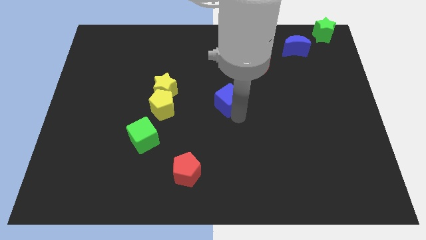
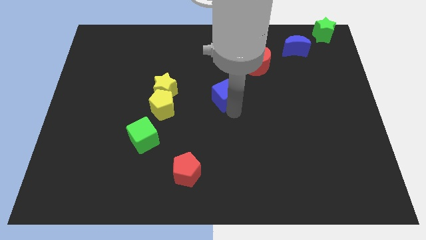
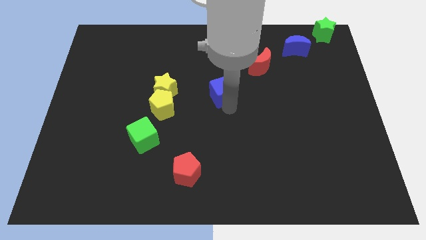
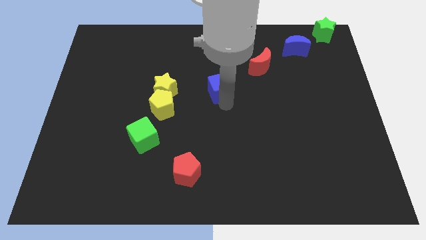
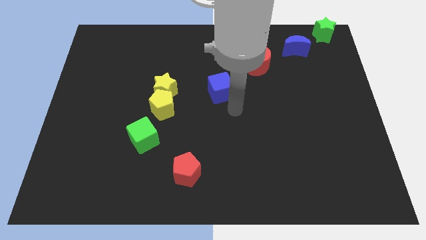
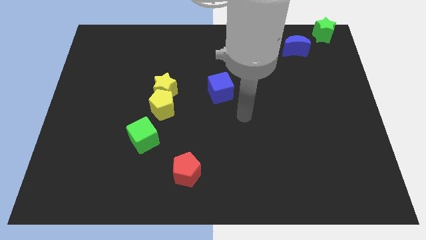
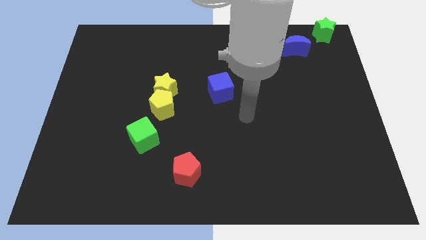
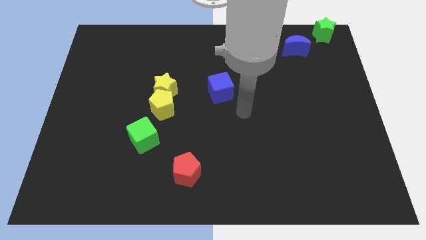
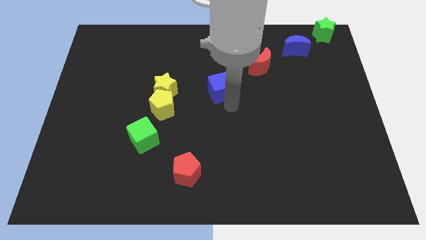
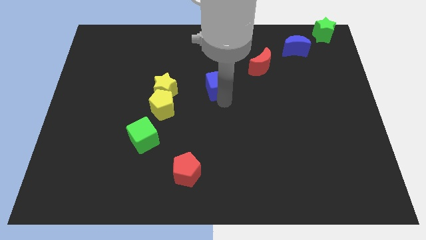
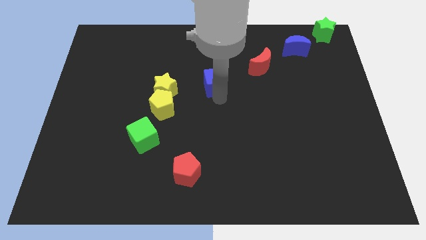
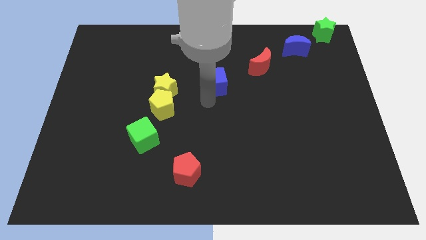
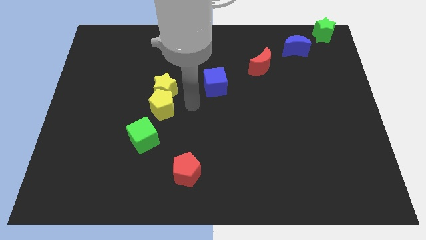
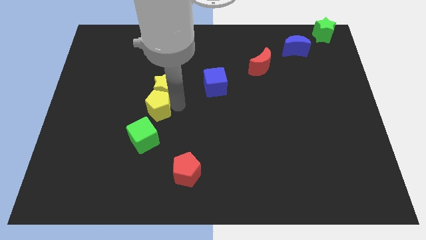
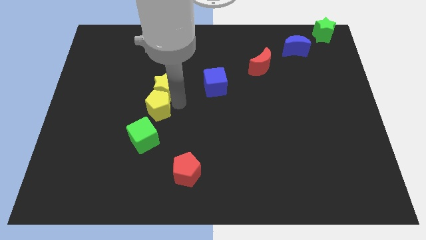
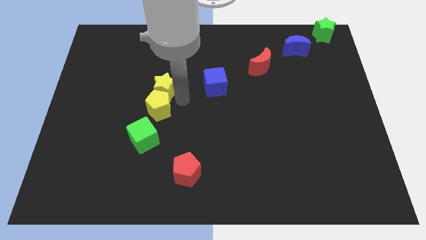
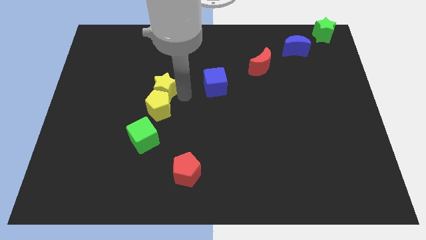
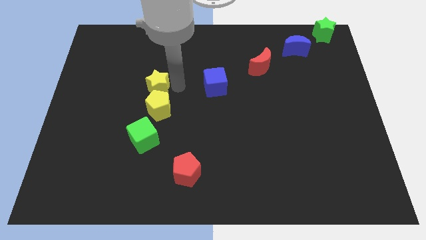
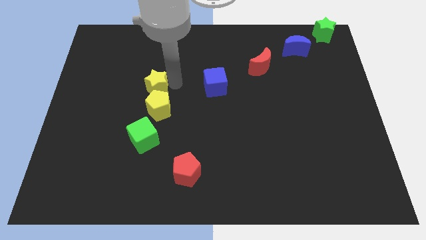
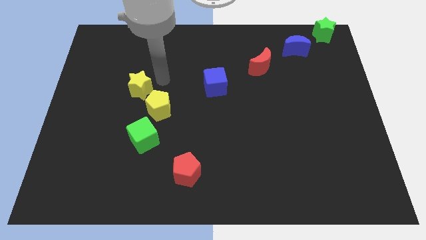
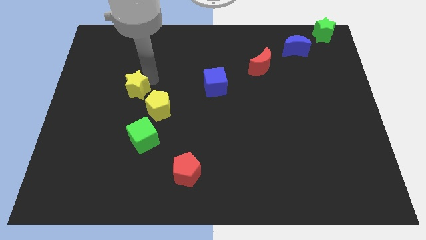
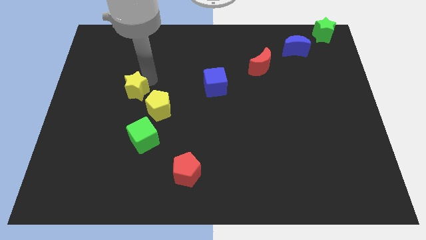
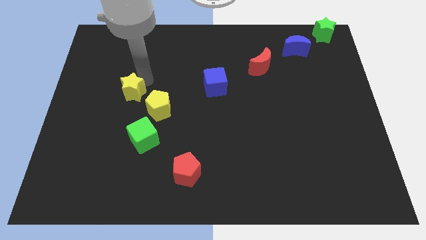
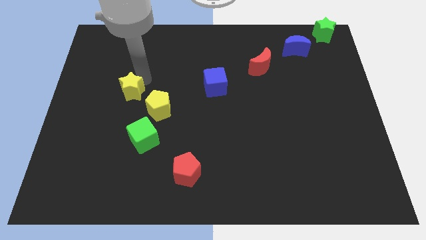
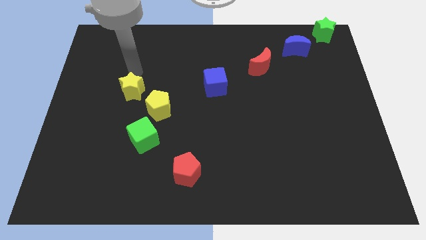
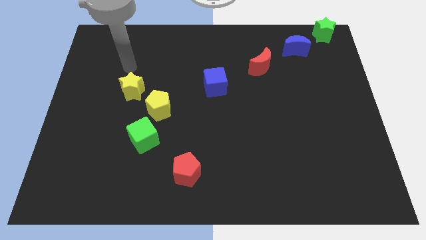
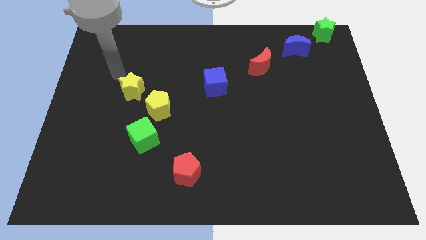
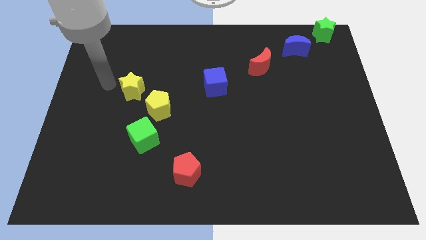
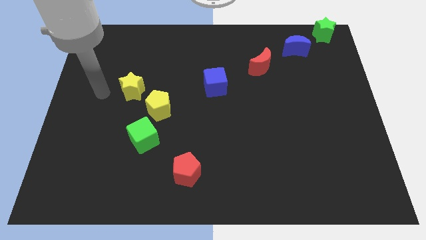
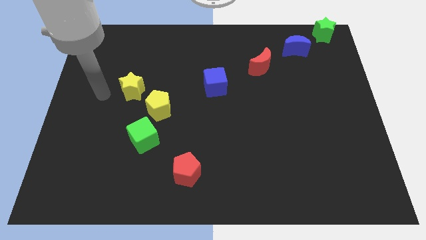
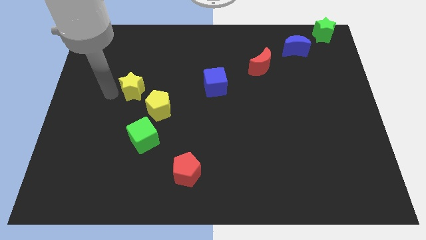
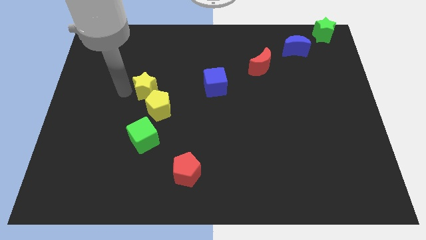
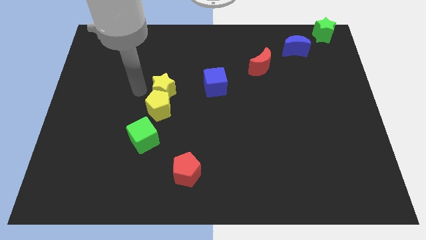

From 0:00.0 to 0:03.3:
separate the yellow star and yellow pentagon

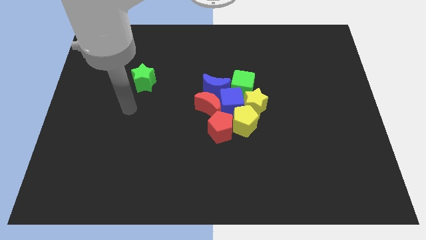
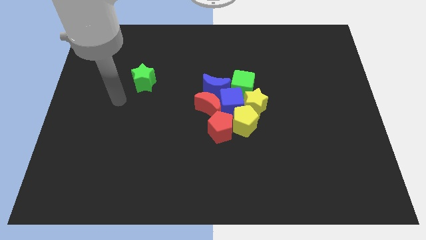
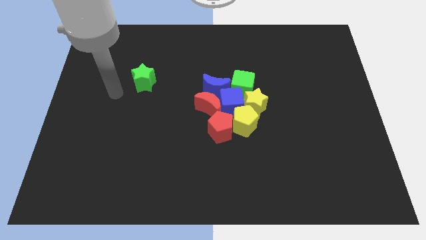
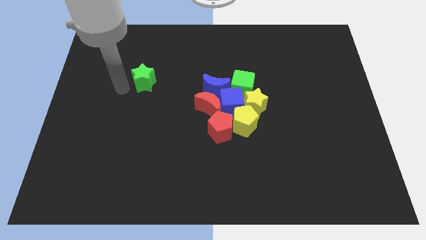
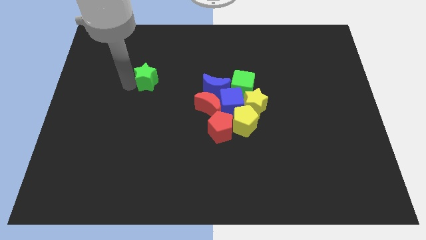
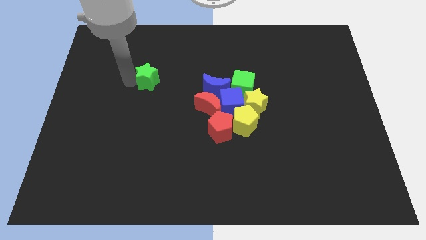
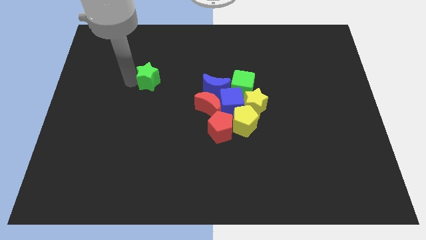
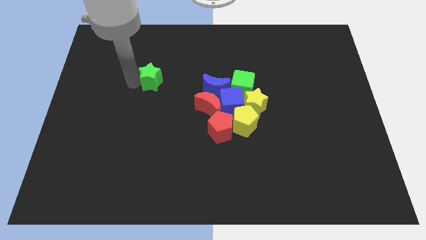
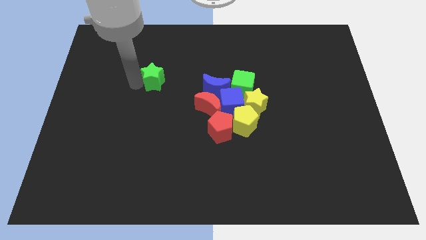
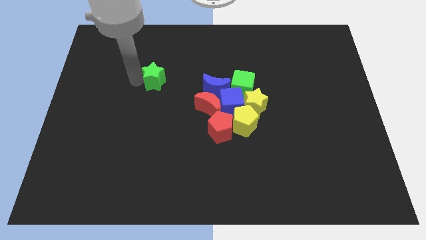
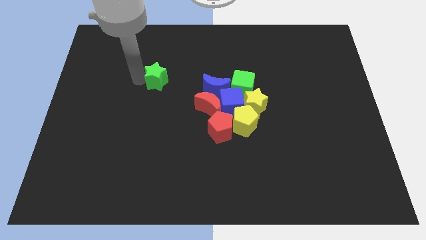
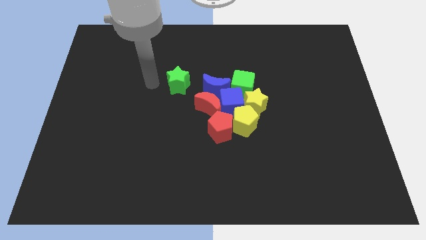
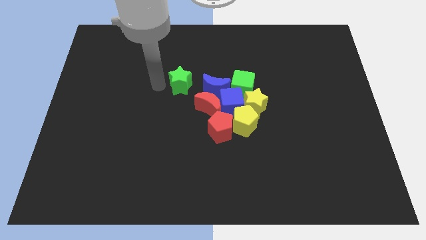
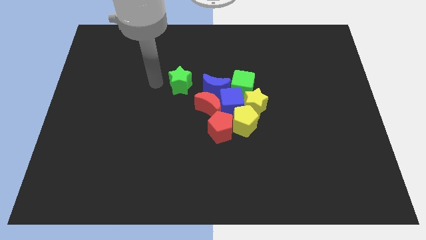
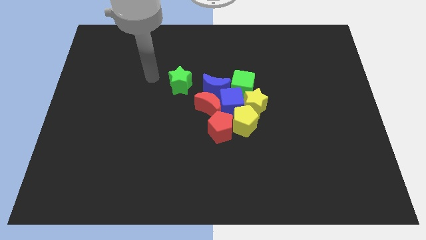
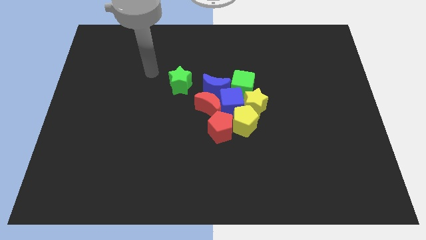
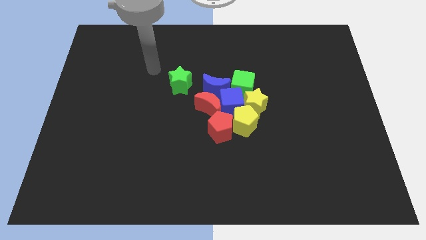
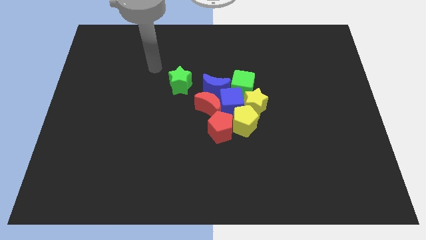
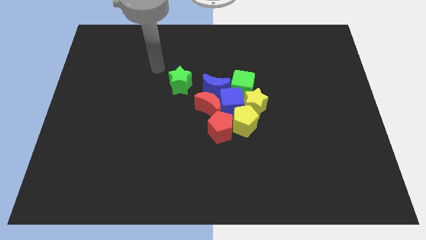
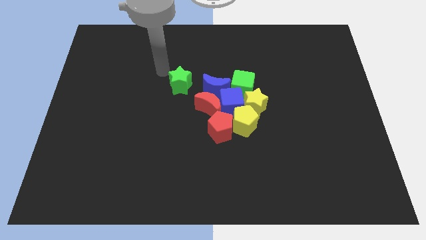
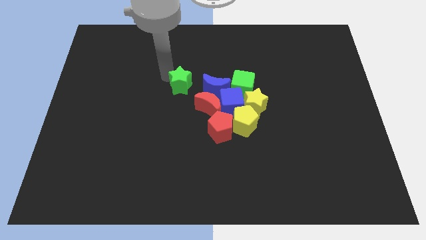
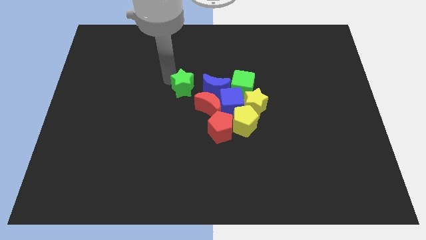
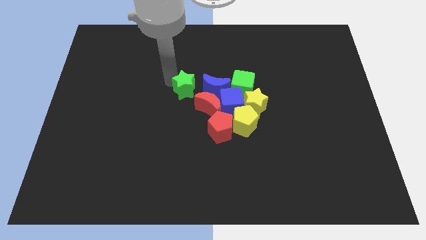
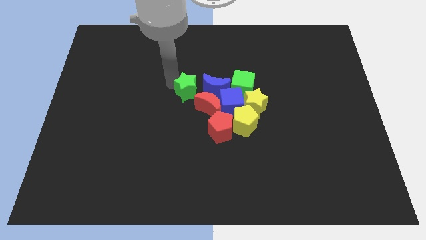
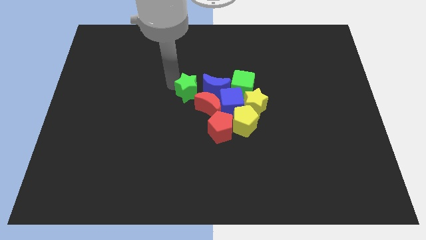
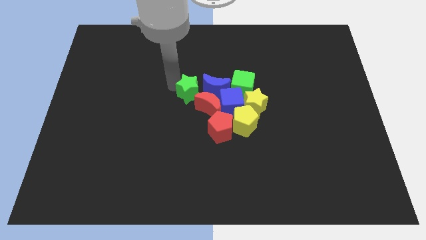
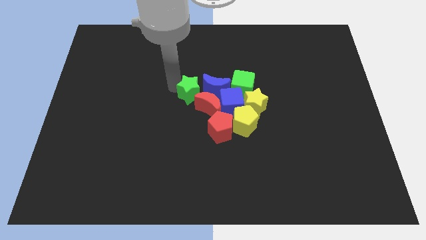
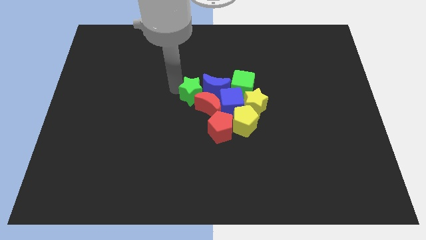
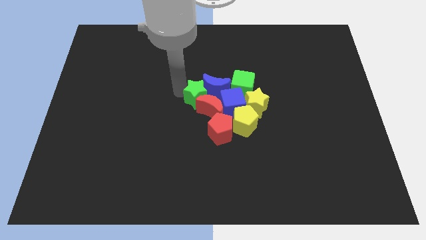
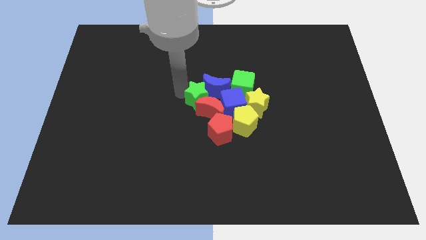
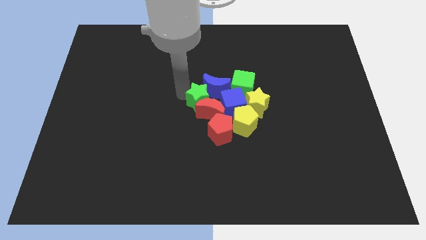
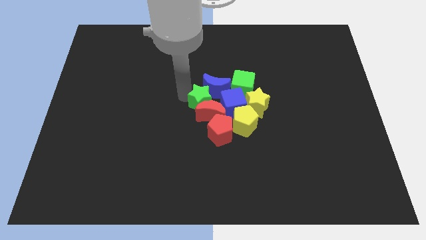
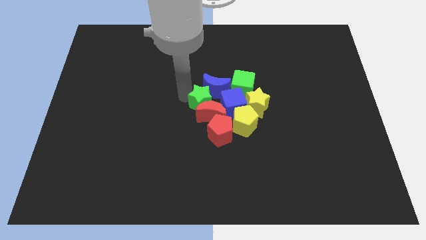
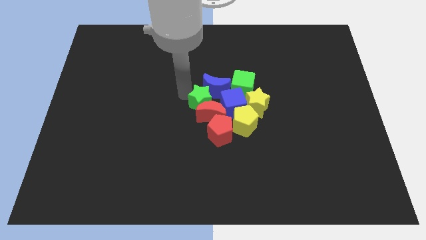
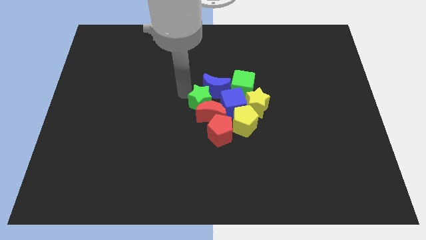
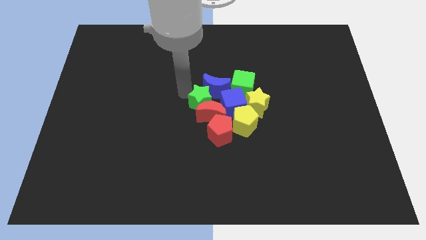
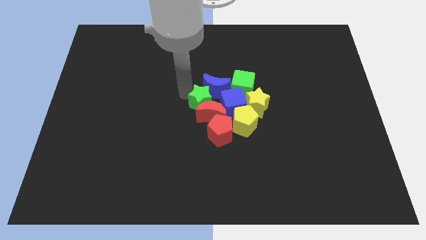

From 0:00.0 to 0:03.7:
push the green star into the red crescent

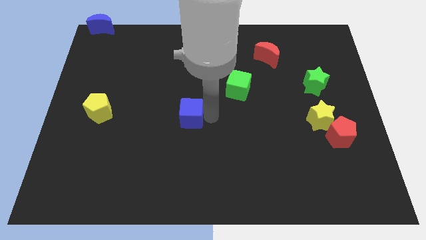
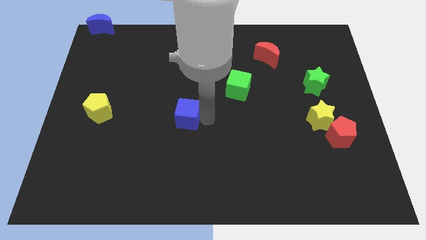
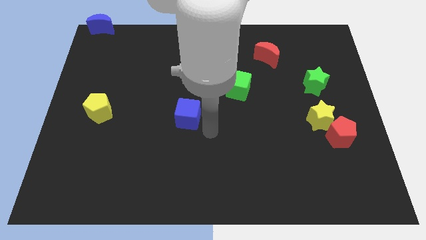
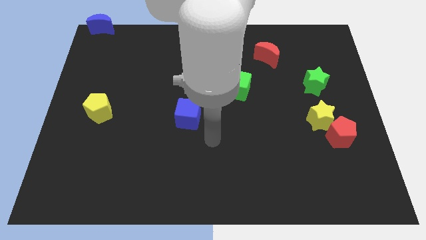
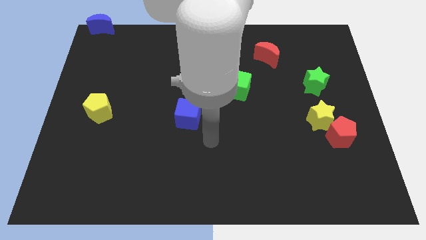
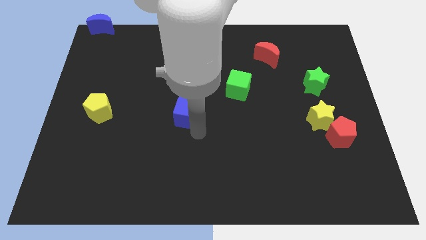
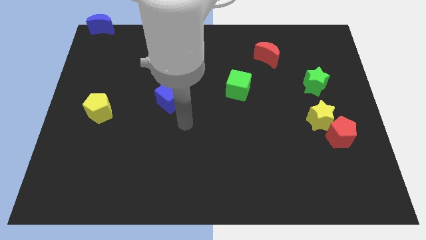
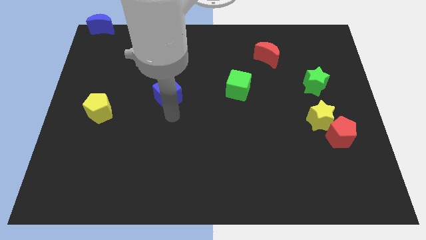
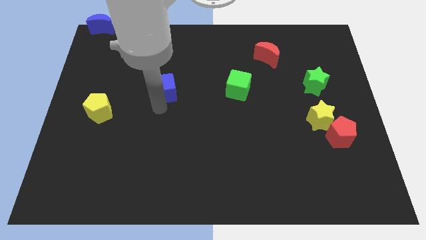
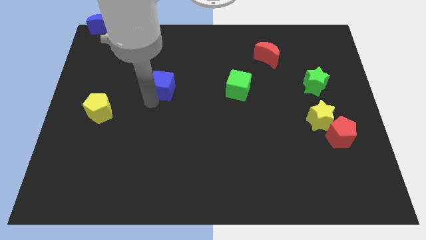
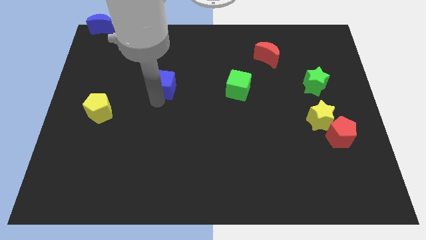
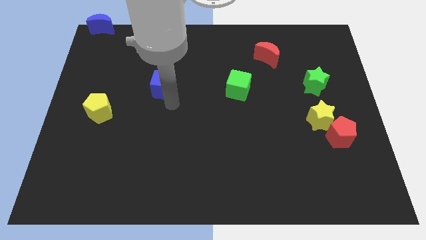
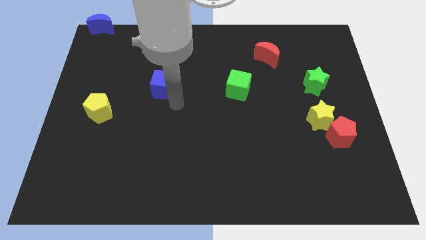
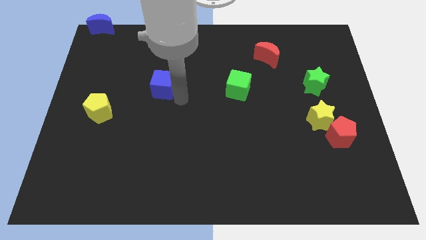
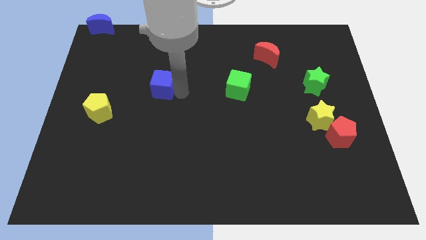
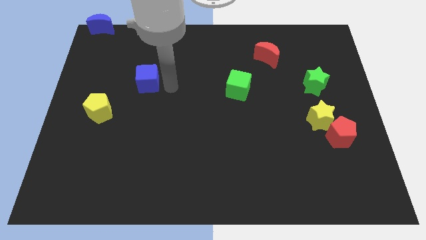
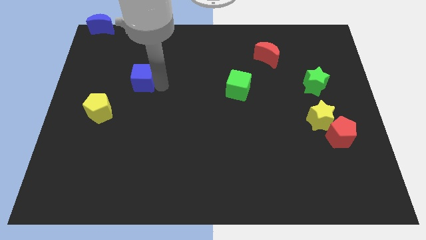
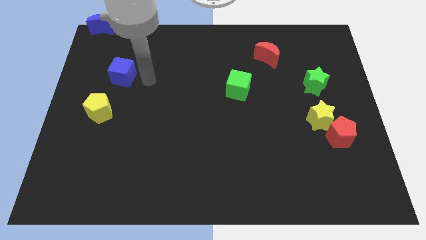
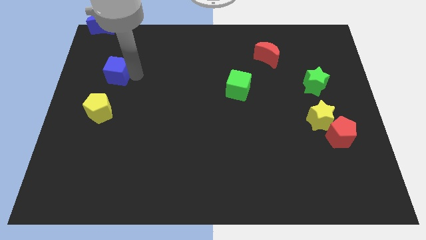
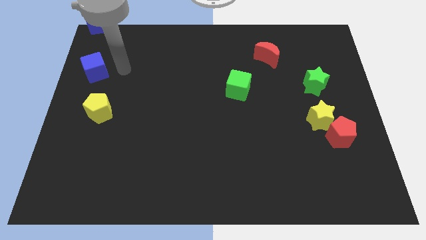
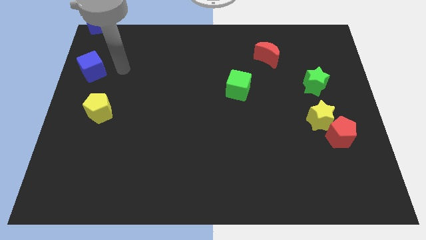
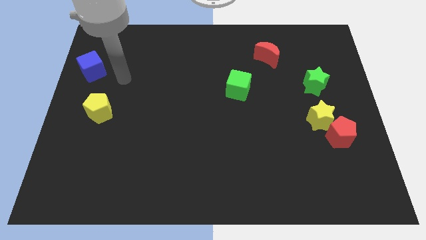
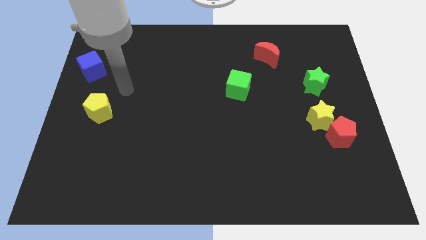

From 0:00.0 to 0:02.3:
place the blue cube in between the yellow pentagon and blue moon
